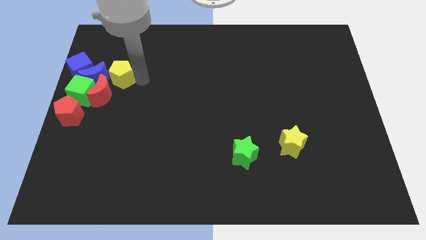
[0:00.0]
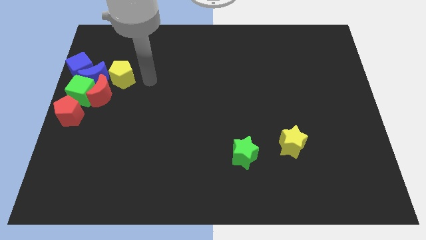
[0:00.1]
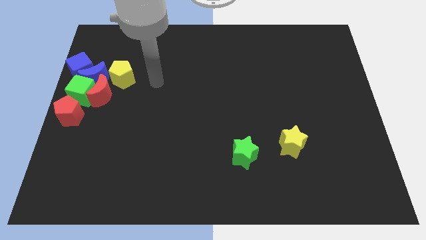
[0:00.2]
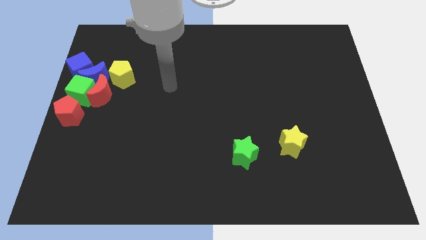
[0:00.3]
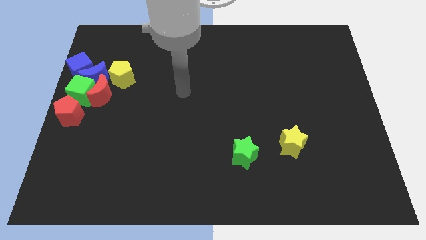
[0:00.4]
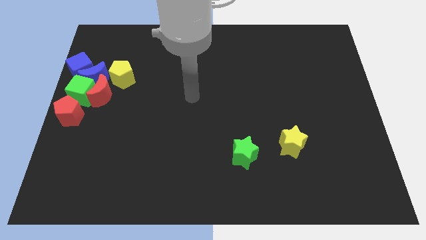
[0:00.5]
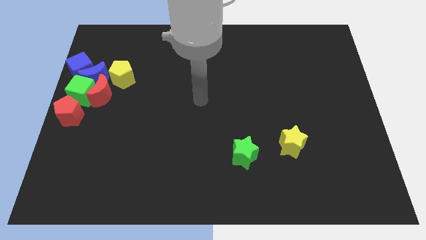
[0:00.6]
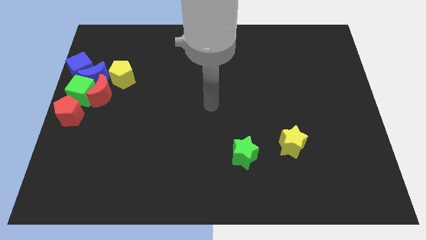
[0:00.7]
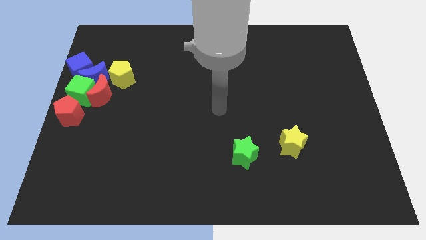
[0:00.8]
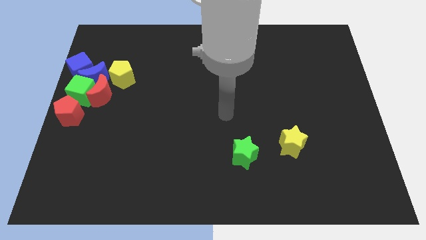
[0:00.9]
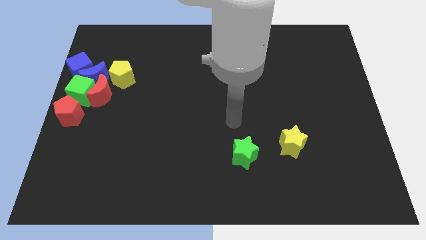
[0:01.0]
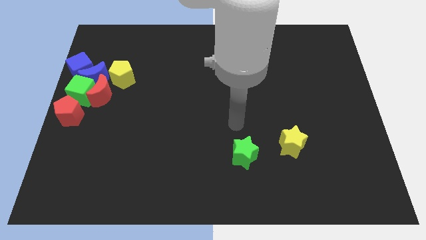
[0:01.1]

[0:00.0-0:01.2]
move the arm away from the yellow pentagon

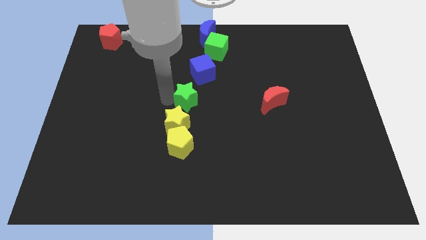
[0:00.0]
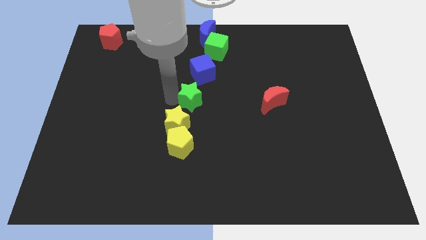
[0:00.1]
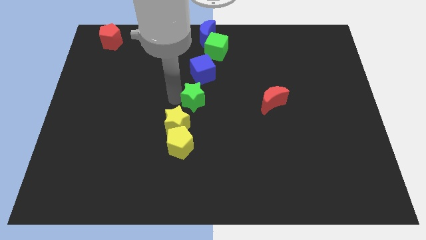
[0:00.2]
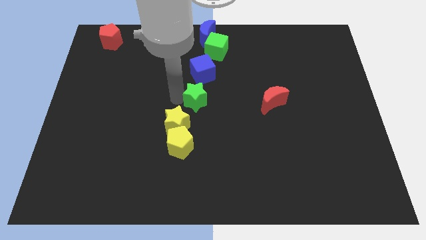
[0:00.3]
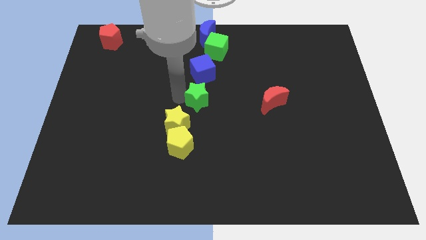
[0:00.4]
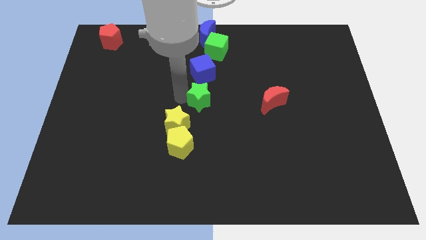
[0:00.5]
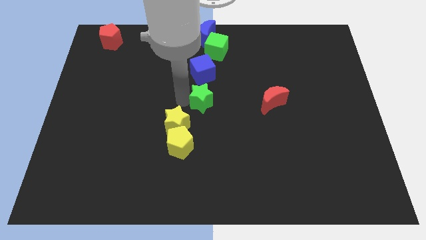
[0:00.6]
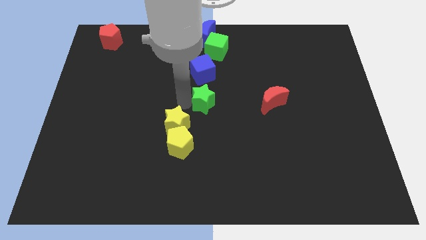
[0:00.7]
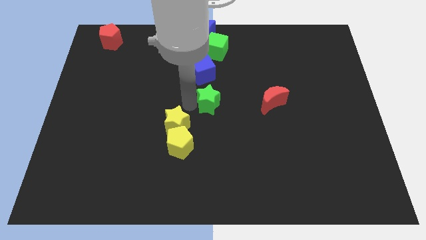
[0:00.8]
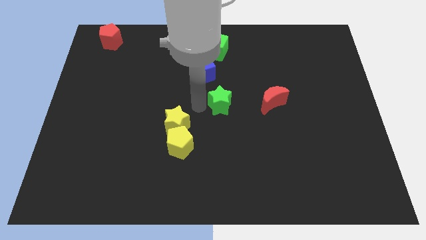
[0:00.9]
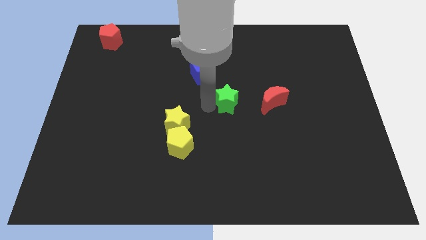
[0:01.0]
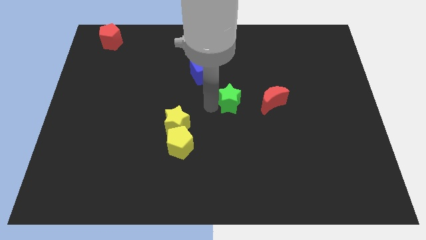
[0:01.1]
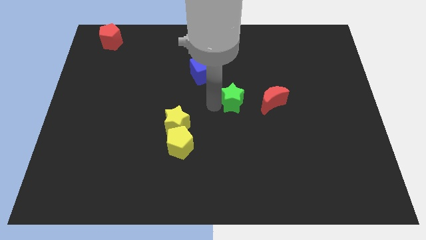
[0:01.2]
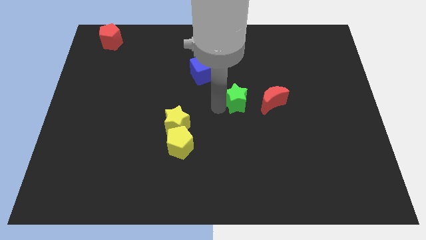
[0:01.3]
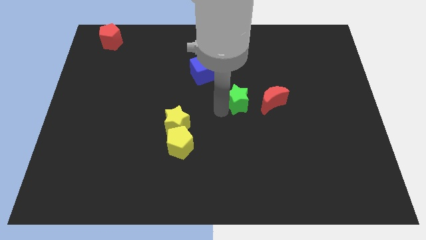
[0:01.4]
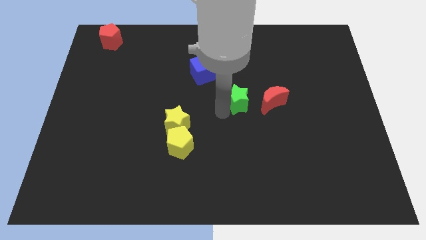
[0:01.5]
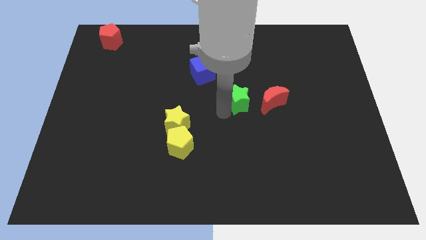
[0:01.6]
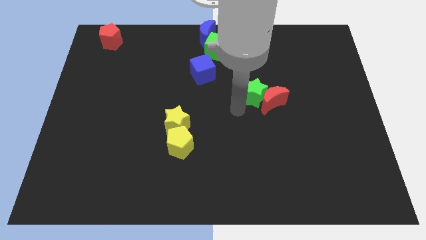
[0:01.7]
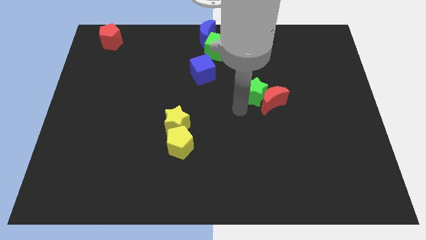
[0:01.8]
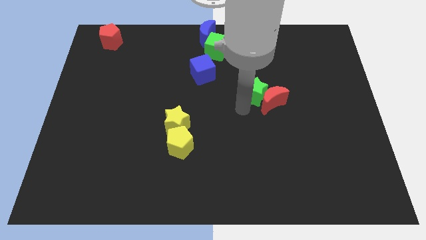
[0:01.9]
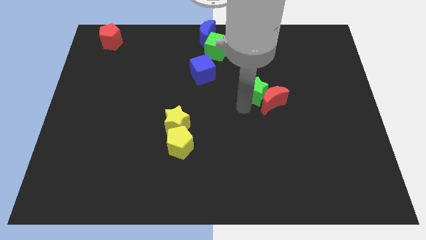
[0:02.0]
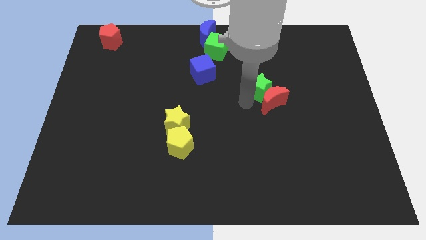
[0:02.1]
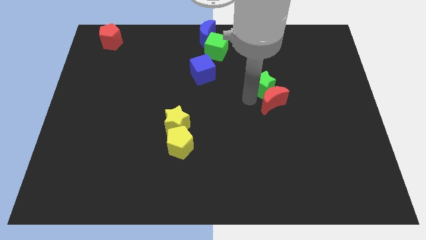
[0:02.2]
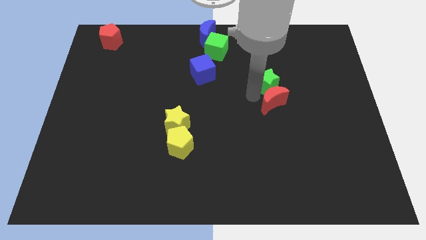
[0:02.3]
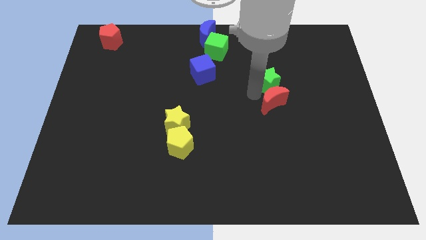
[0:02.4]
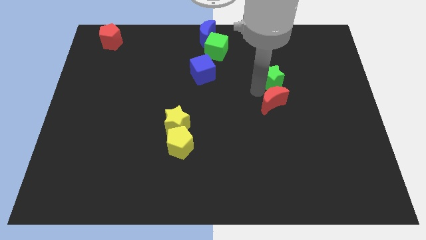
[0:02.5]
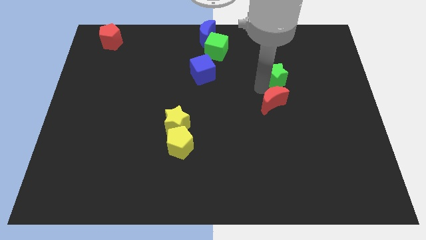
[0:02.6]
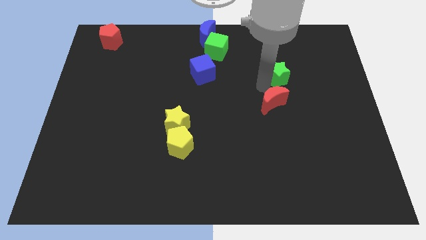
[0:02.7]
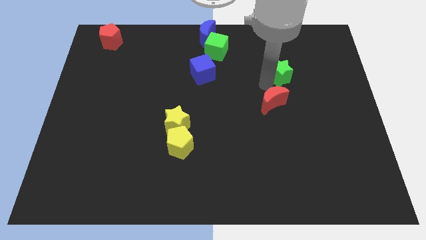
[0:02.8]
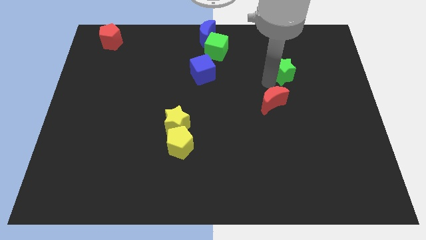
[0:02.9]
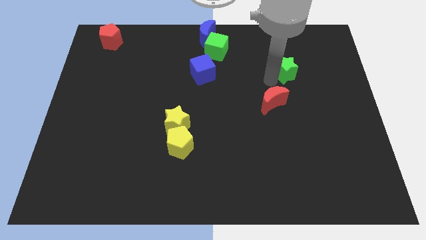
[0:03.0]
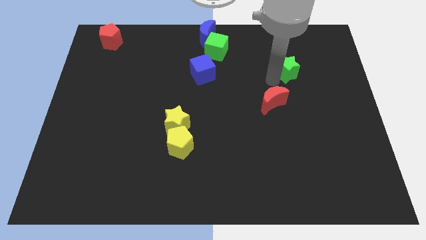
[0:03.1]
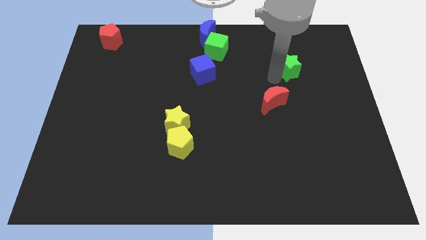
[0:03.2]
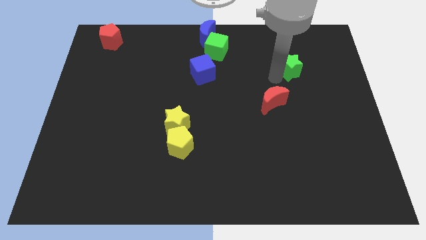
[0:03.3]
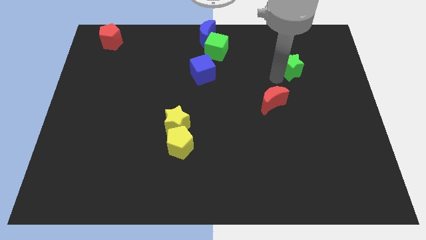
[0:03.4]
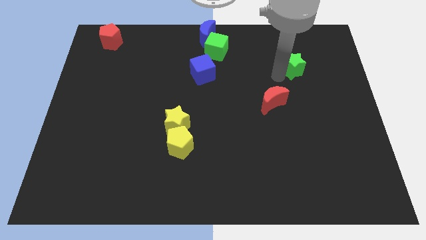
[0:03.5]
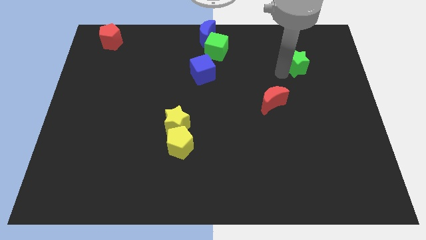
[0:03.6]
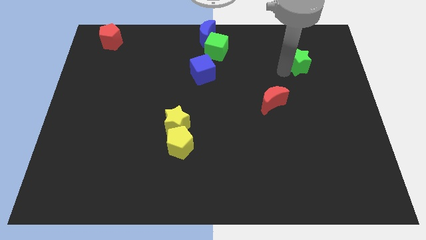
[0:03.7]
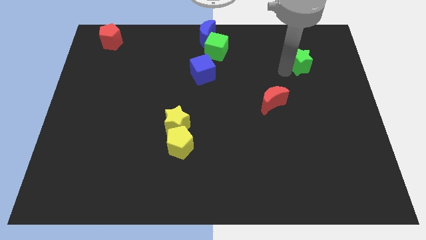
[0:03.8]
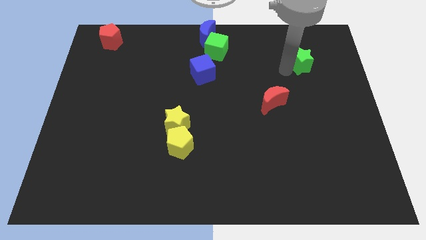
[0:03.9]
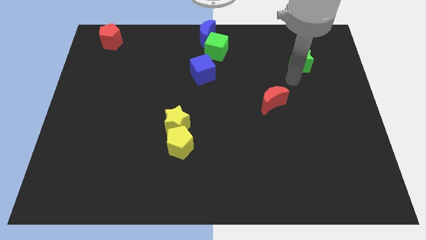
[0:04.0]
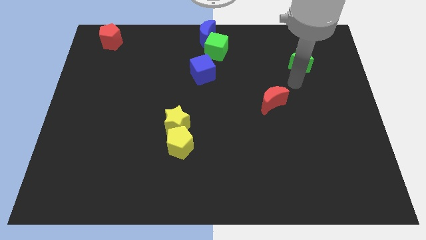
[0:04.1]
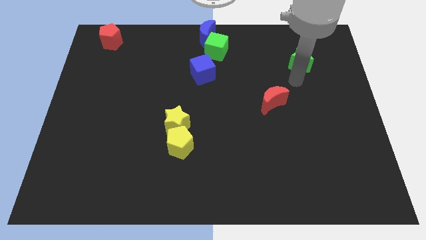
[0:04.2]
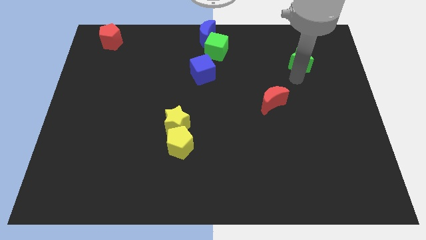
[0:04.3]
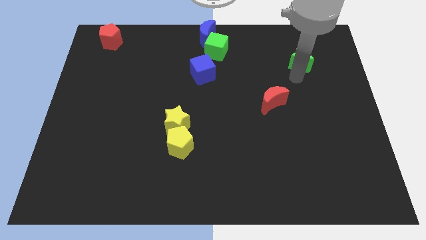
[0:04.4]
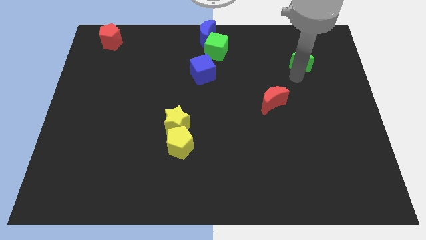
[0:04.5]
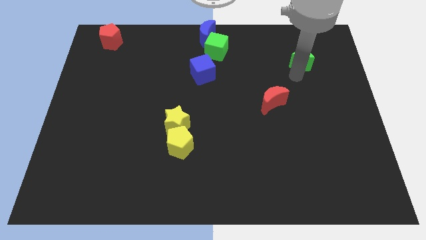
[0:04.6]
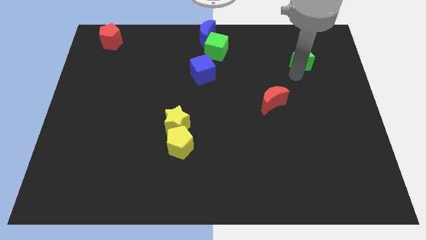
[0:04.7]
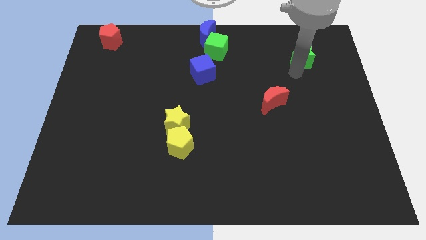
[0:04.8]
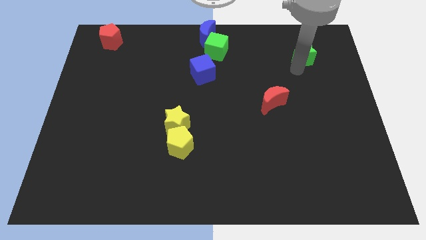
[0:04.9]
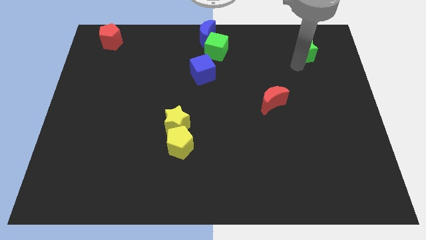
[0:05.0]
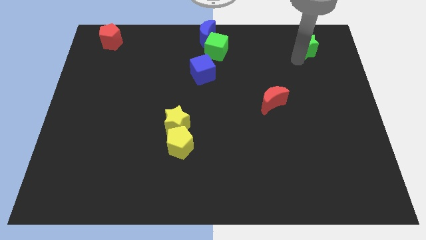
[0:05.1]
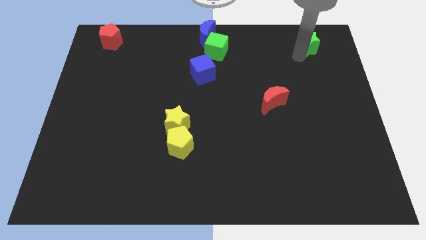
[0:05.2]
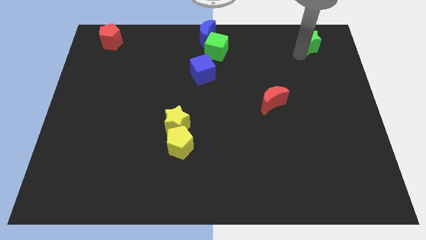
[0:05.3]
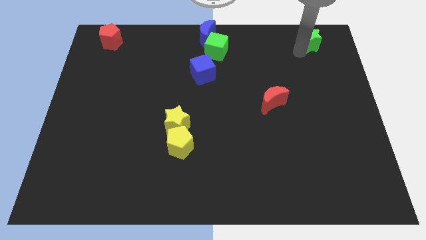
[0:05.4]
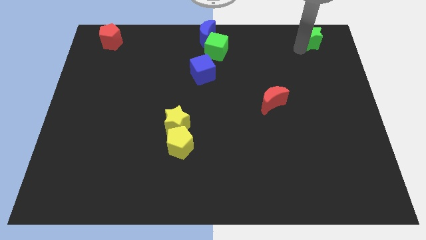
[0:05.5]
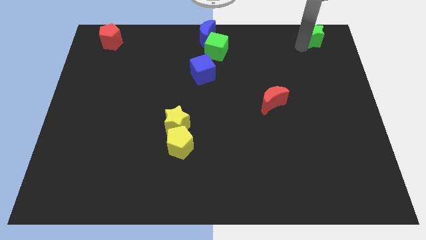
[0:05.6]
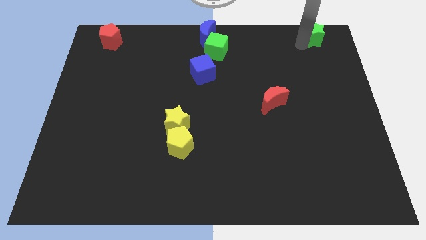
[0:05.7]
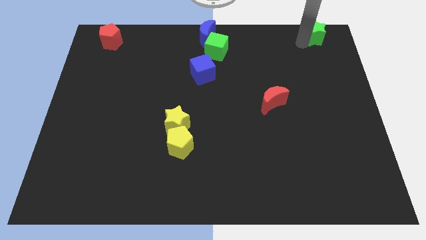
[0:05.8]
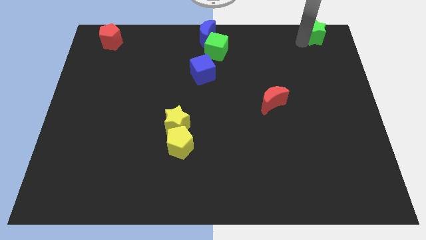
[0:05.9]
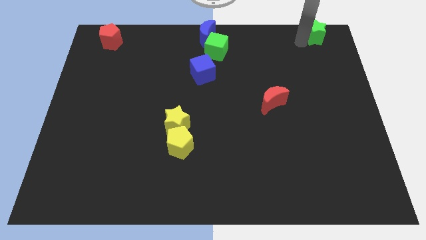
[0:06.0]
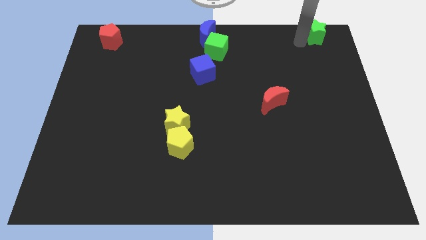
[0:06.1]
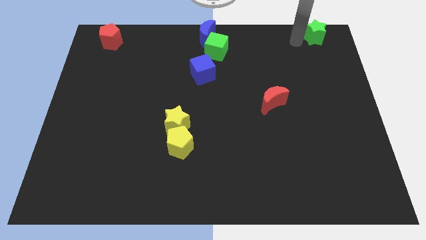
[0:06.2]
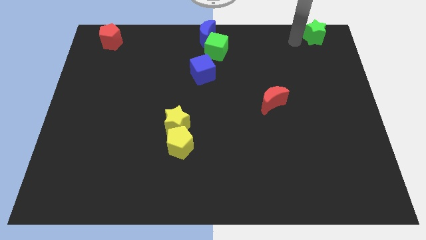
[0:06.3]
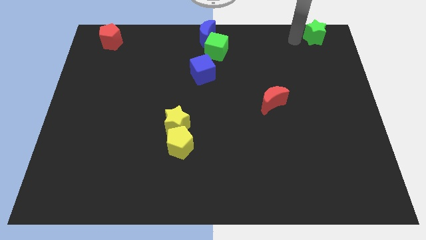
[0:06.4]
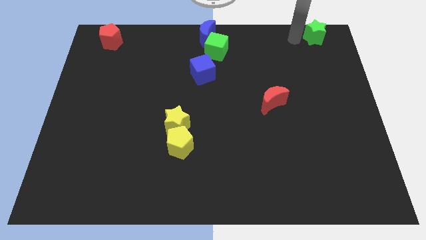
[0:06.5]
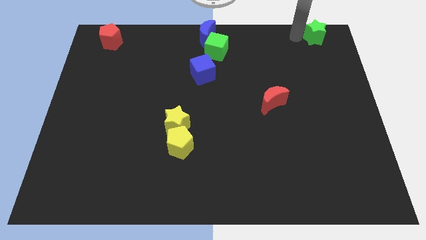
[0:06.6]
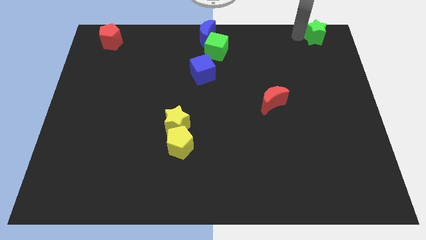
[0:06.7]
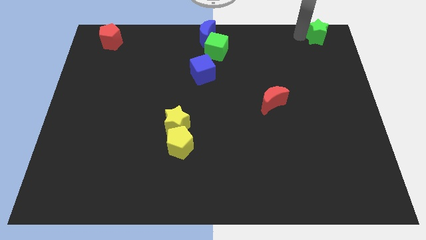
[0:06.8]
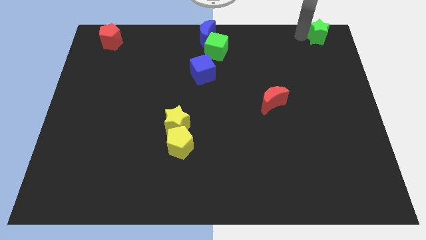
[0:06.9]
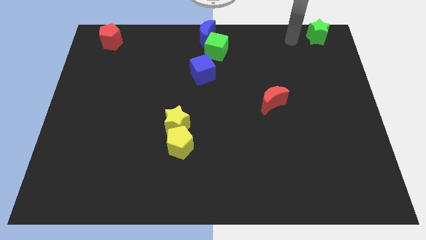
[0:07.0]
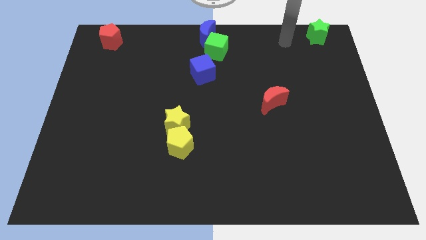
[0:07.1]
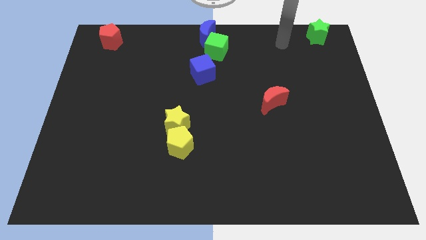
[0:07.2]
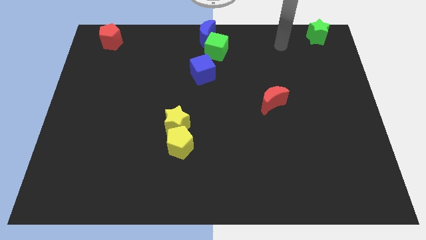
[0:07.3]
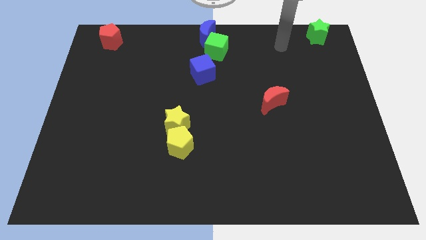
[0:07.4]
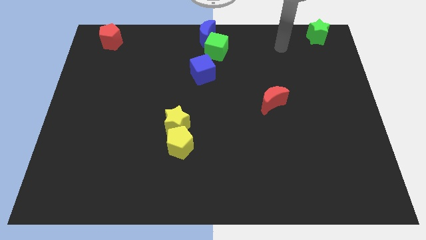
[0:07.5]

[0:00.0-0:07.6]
move the green star to the right
